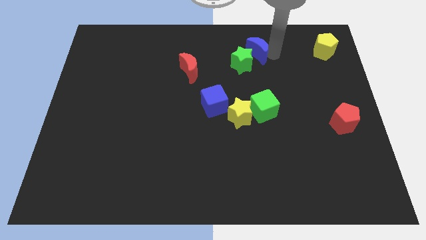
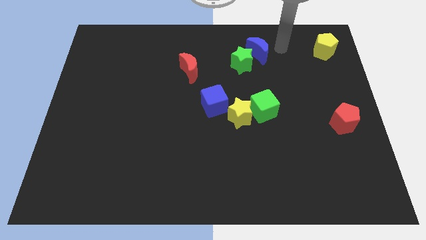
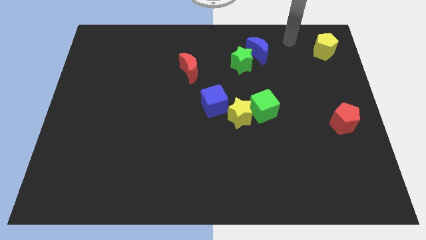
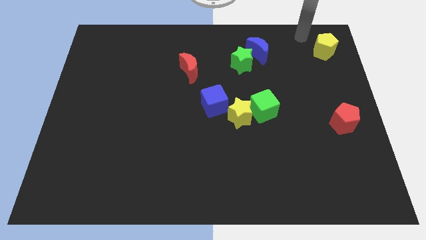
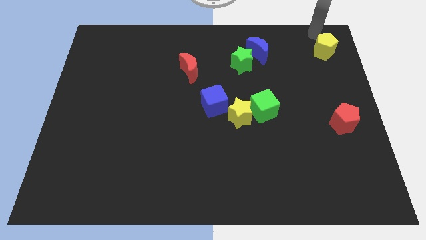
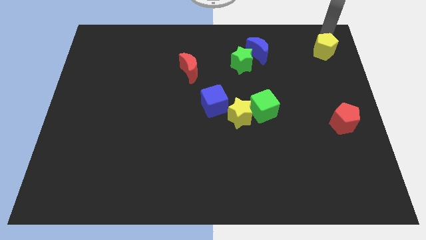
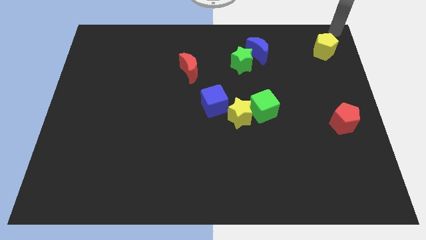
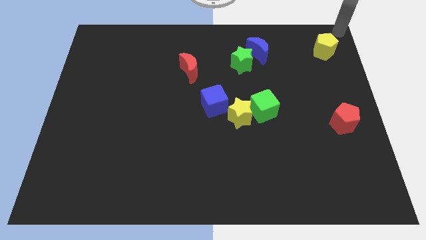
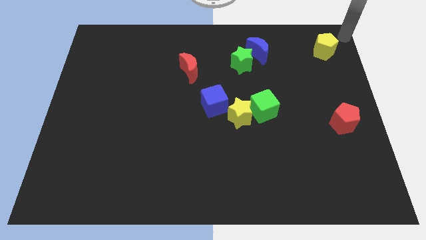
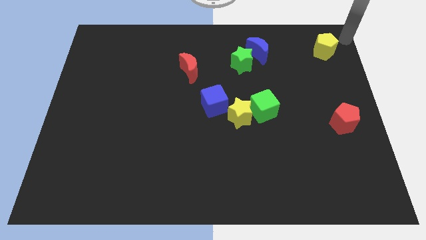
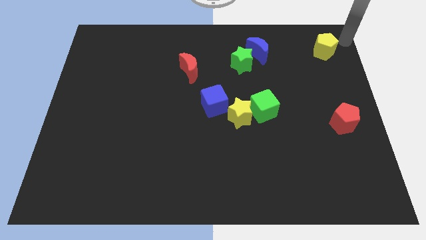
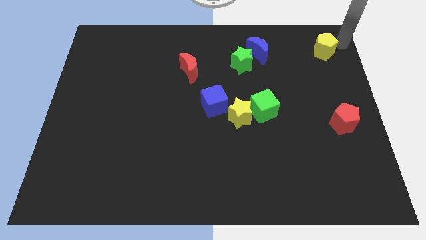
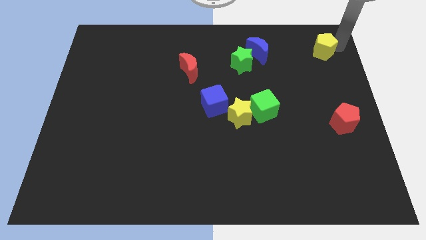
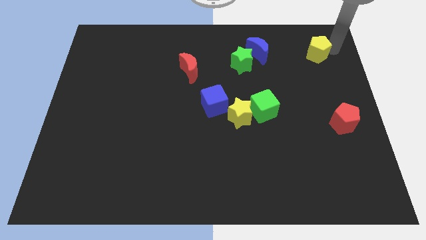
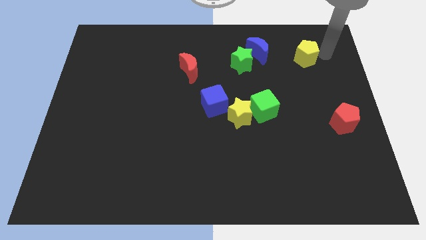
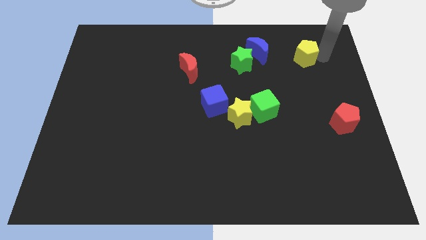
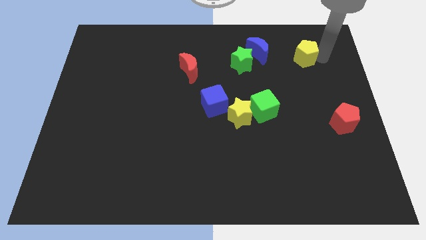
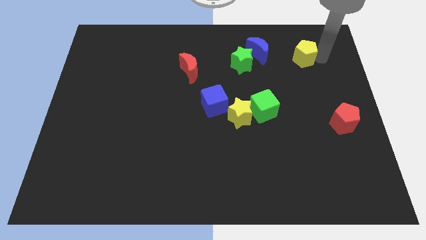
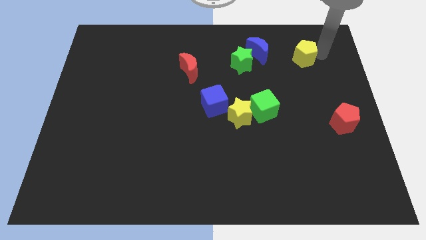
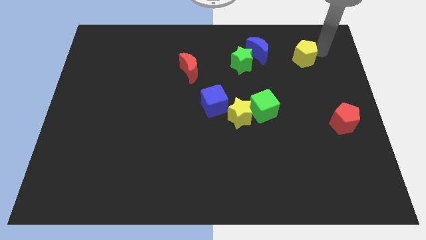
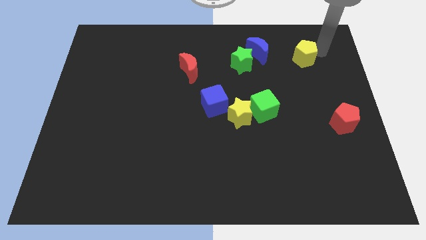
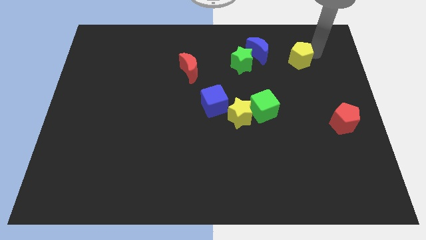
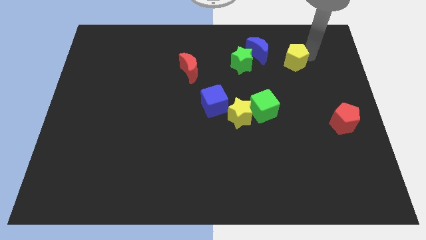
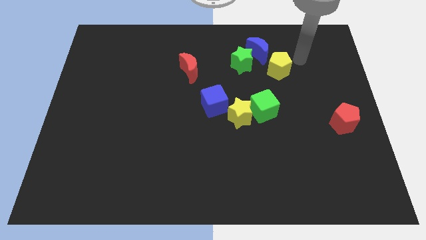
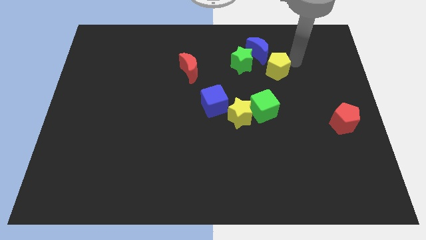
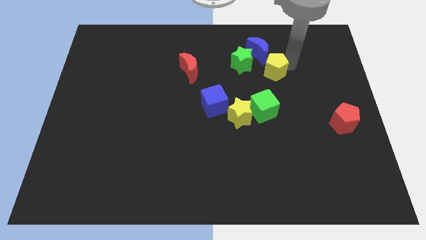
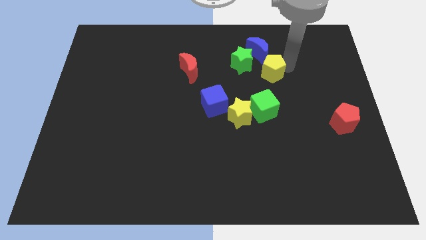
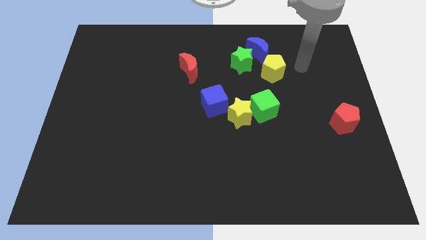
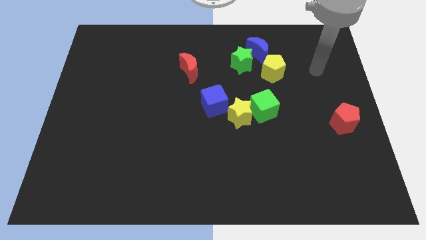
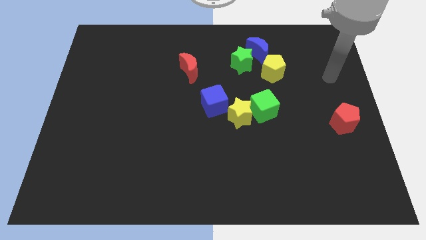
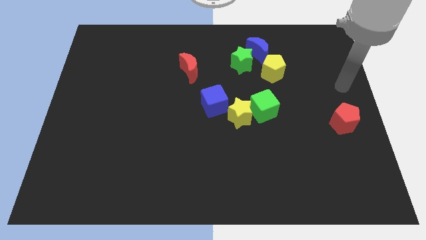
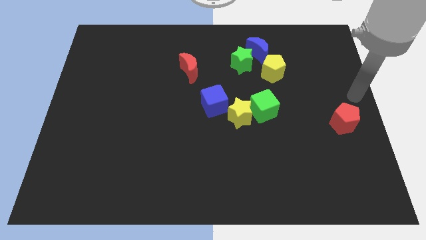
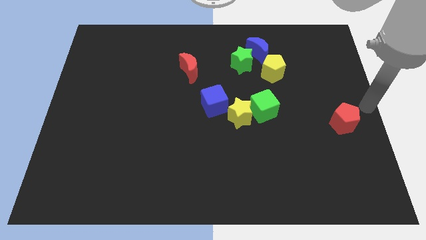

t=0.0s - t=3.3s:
move the arm away from the blue moon

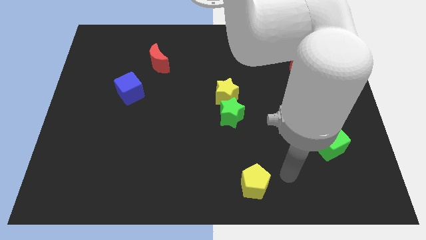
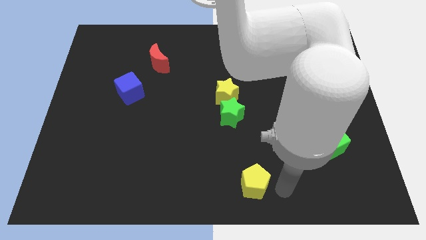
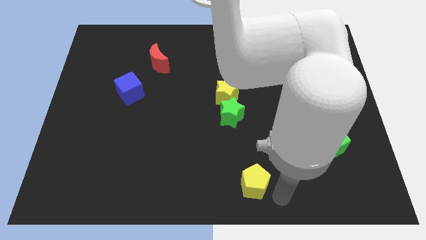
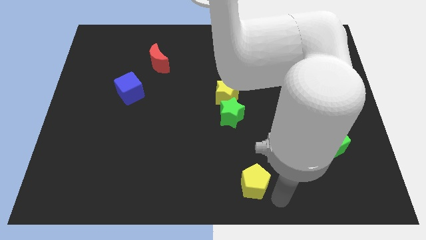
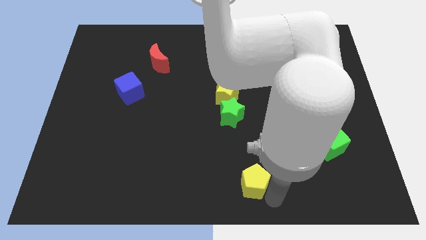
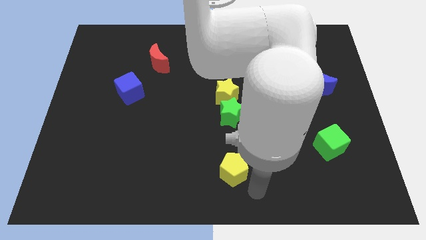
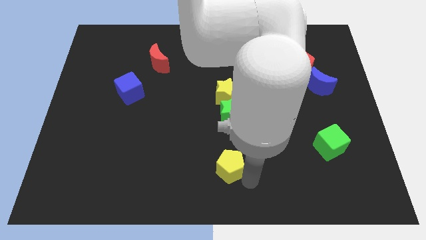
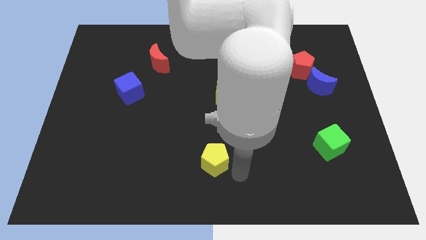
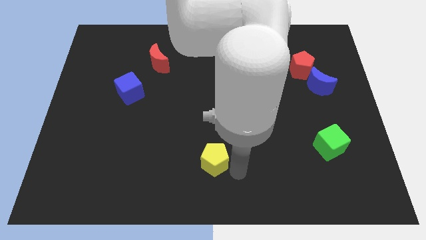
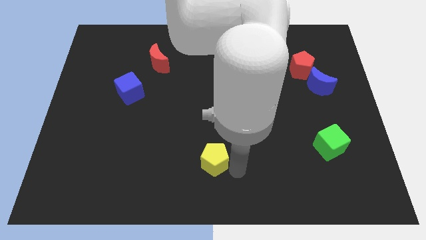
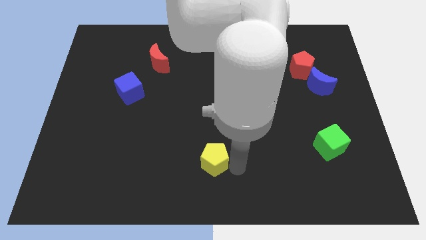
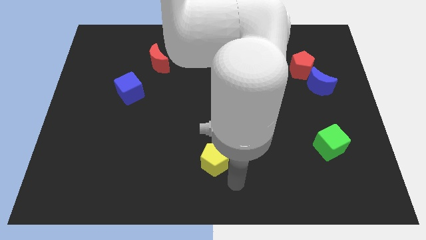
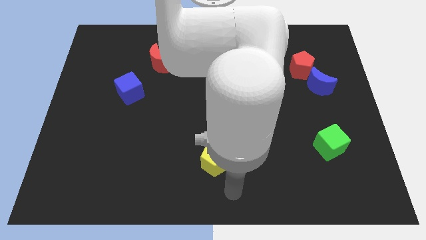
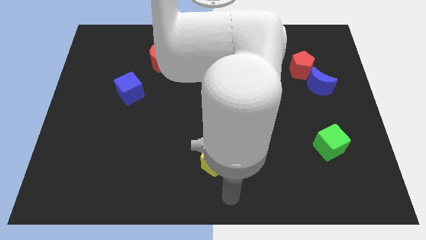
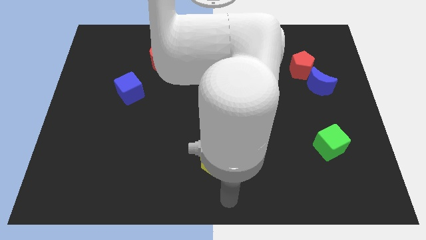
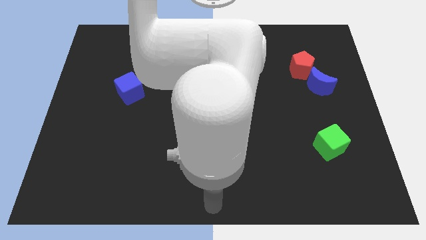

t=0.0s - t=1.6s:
slide the yellow pentagon diagonally bottom left to the green star

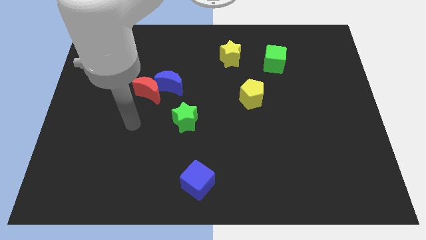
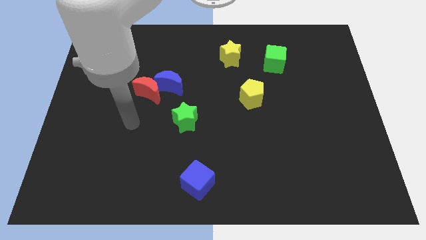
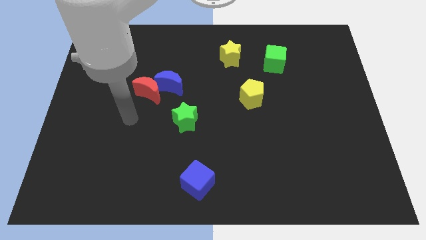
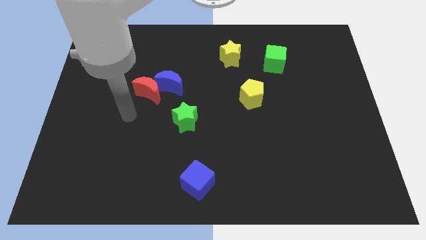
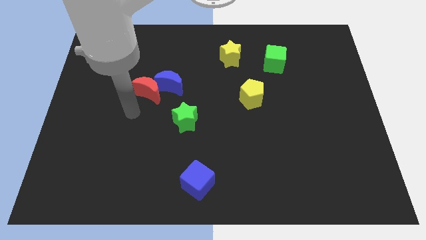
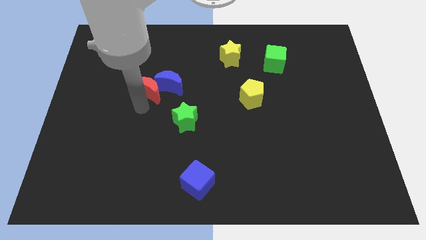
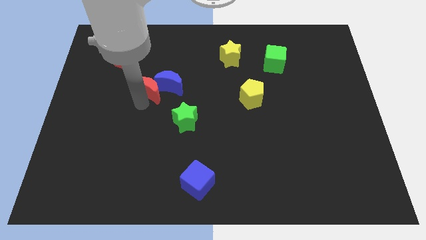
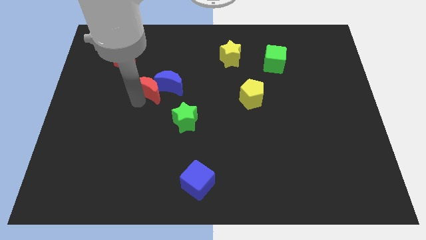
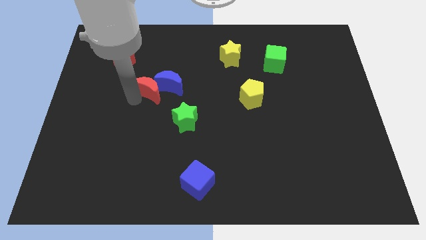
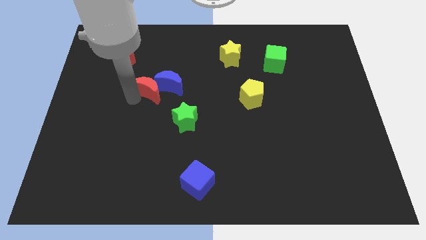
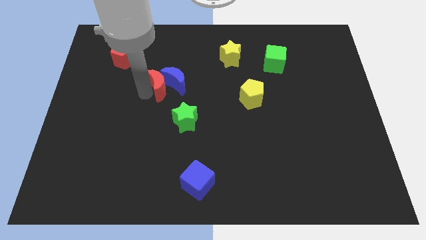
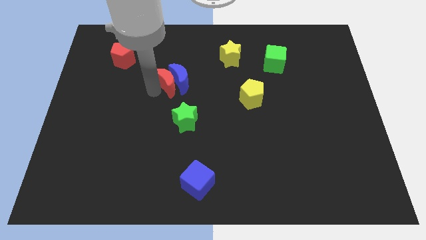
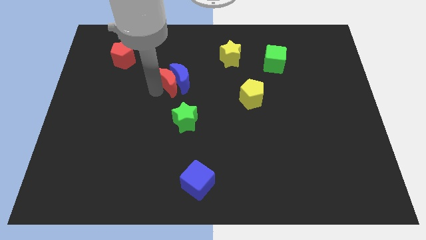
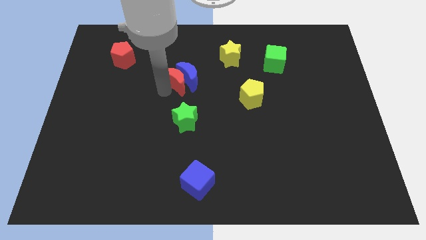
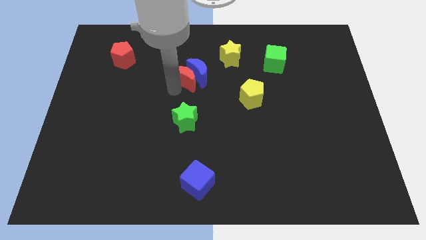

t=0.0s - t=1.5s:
move red moon and blue crescent towards the yellow star

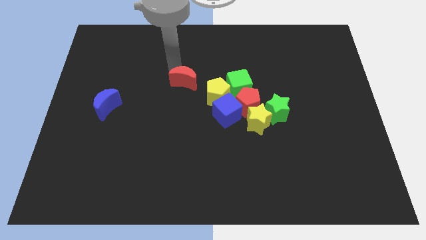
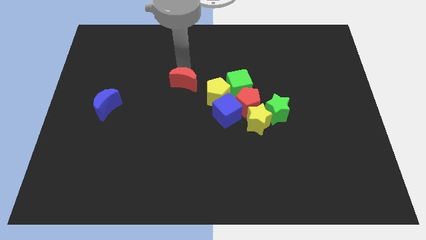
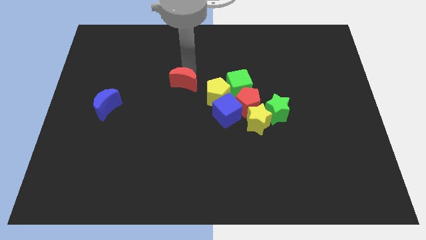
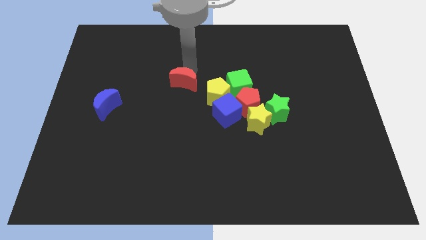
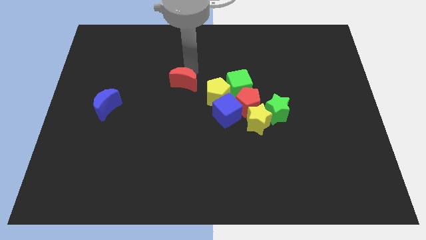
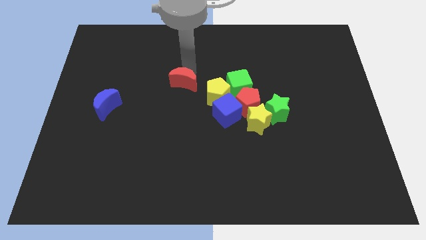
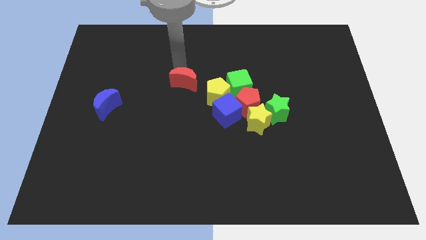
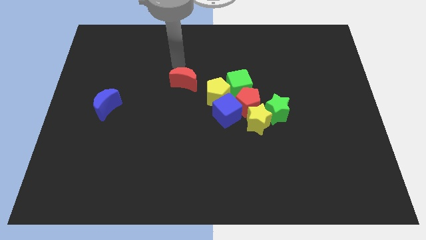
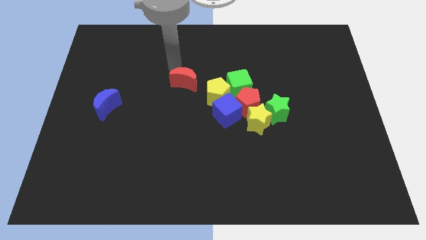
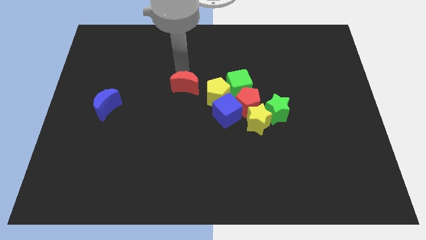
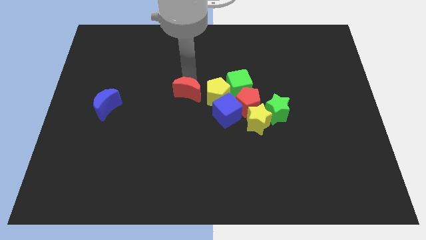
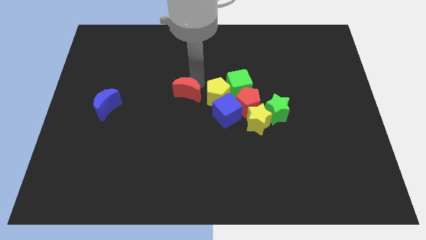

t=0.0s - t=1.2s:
move the red crescent to the left of the yellow pentagon

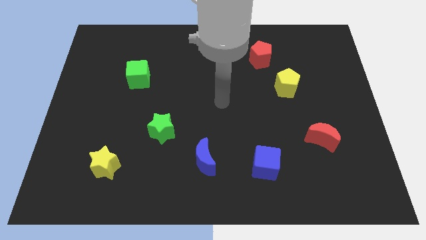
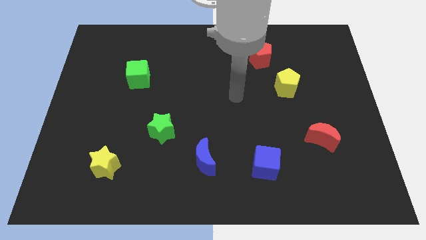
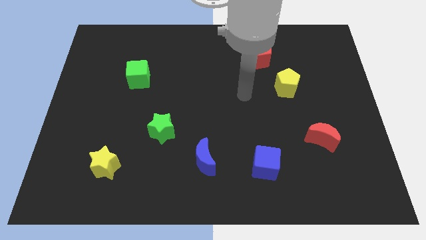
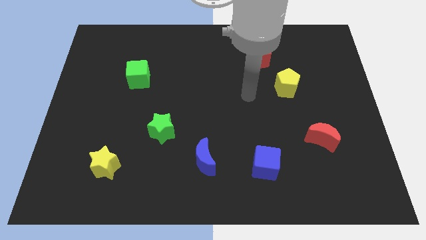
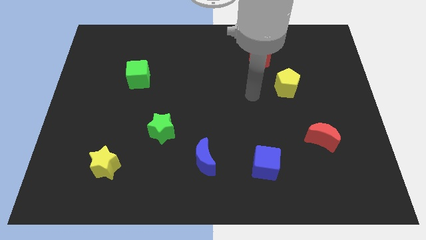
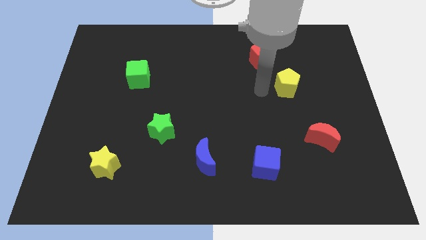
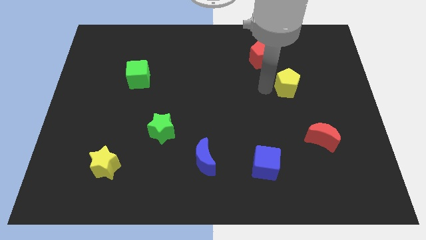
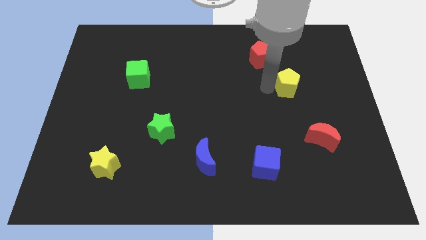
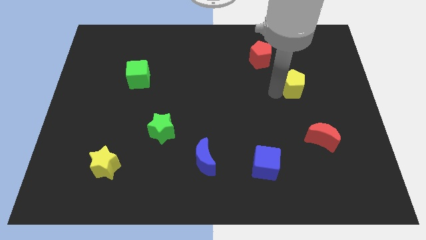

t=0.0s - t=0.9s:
tap yellow pentagon on its left

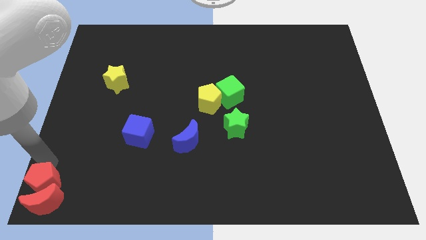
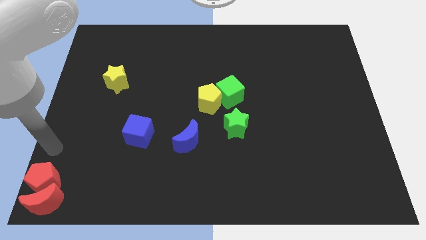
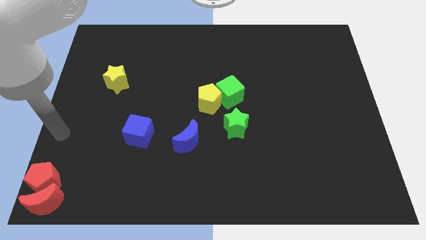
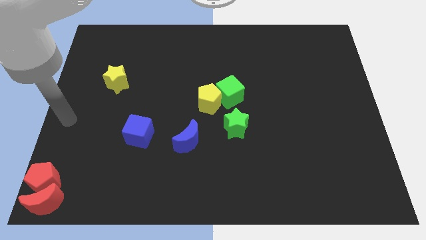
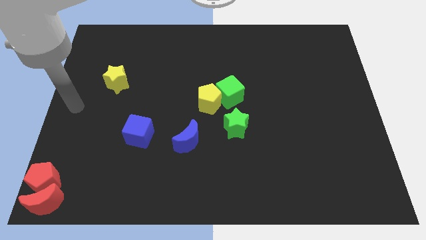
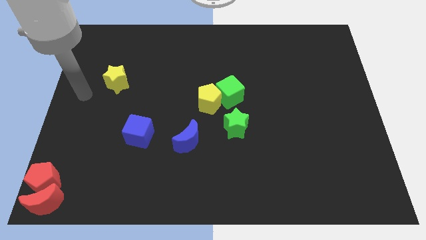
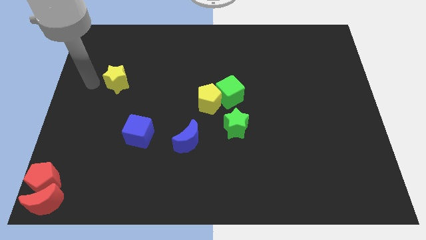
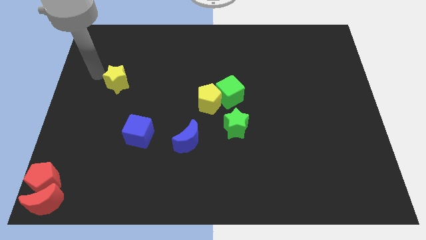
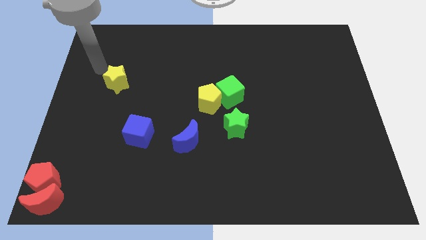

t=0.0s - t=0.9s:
move your arm away from the red pentagon
